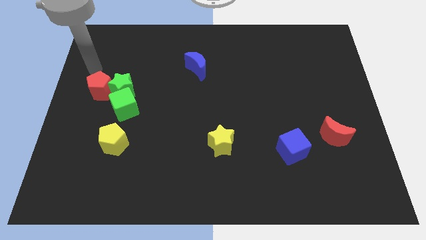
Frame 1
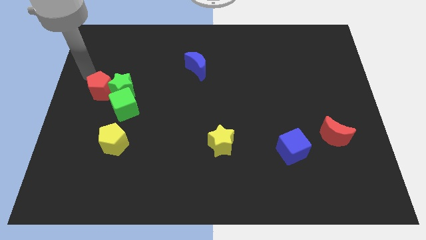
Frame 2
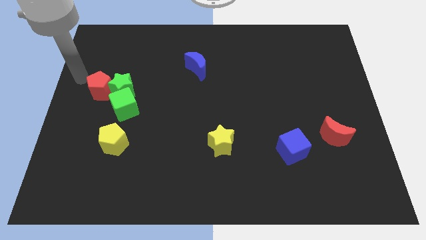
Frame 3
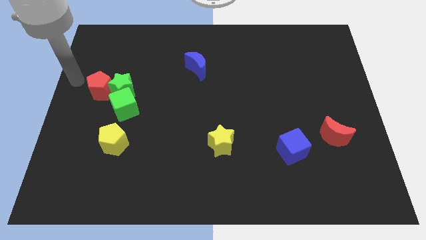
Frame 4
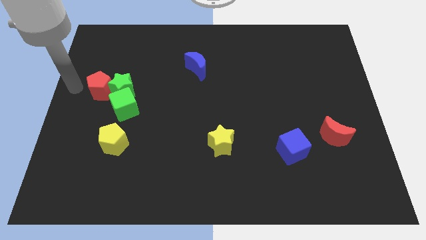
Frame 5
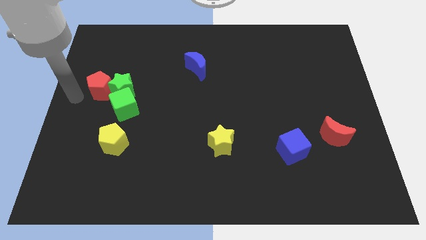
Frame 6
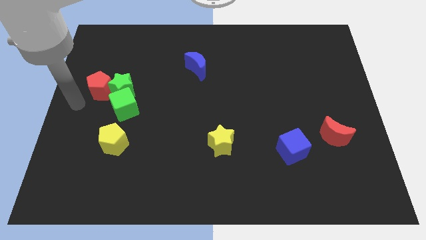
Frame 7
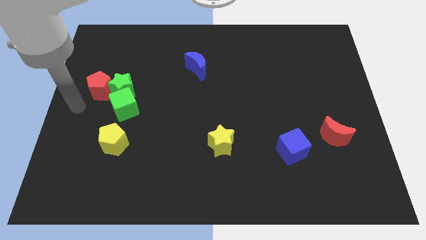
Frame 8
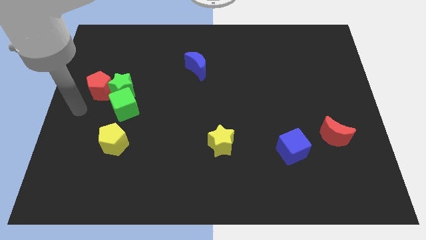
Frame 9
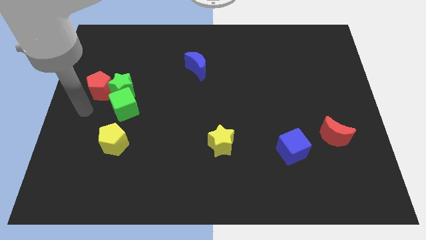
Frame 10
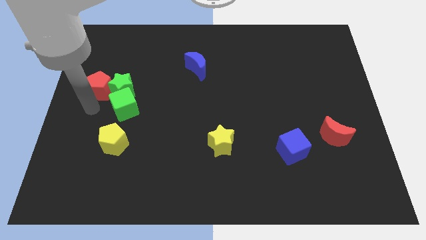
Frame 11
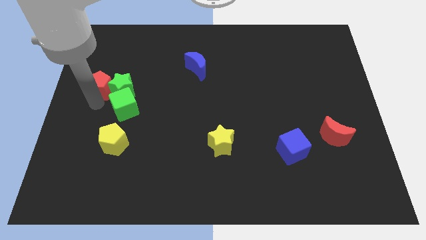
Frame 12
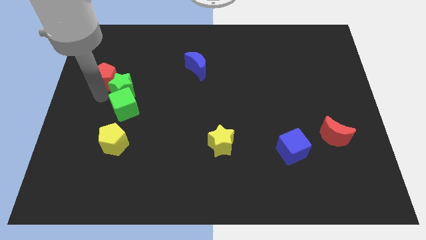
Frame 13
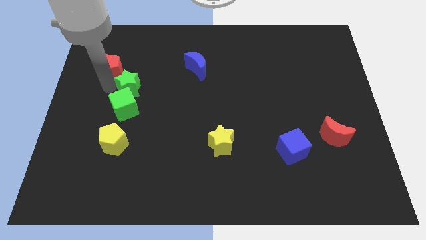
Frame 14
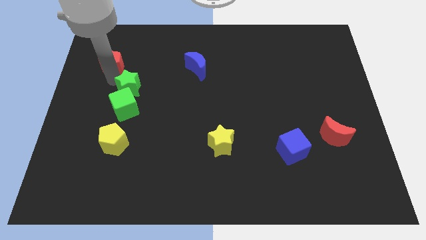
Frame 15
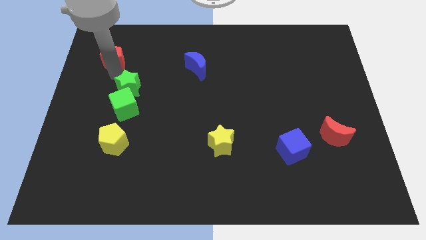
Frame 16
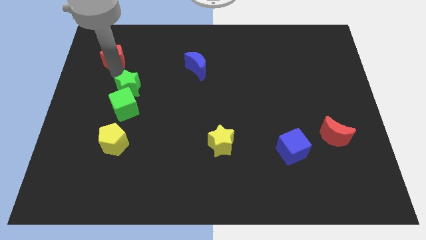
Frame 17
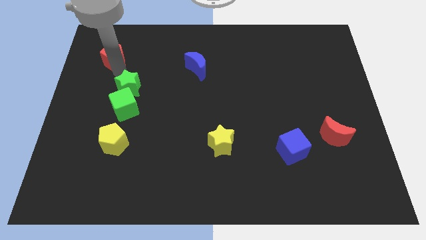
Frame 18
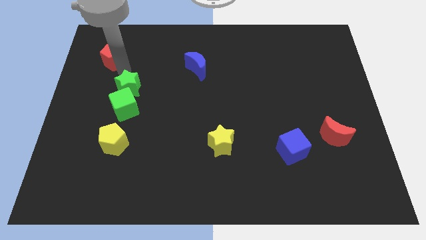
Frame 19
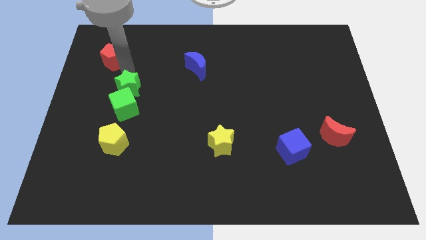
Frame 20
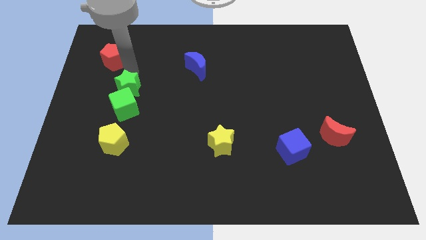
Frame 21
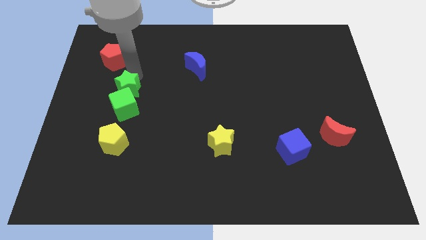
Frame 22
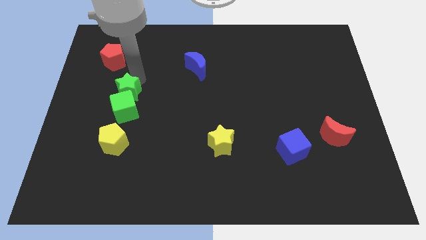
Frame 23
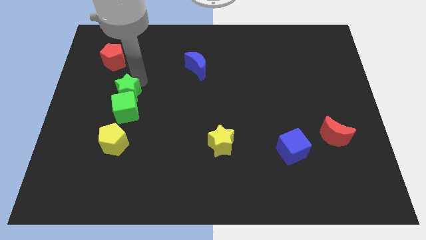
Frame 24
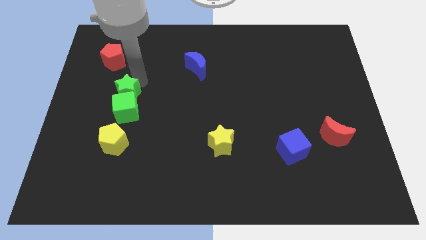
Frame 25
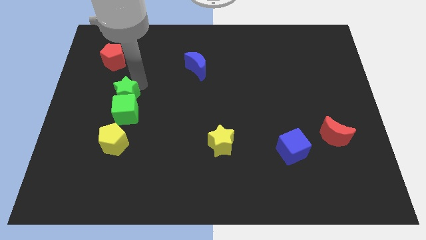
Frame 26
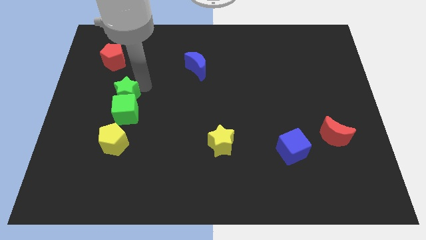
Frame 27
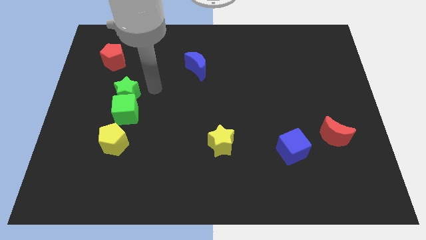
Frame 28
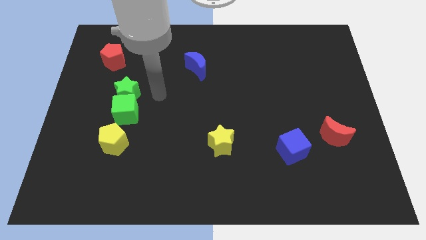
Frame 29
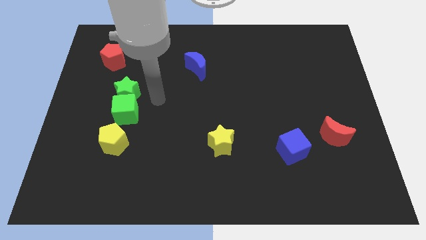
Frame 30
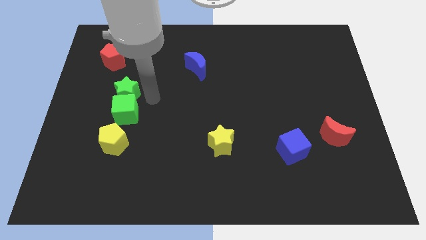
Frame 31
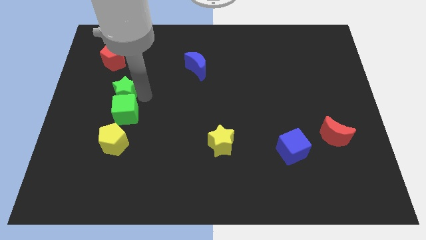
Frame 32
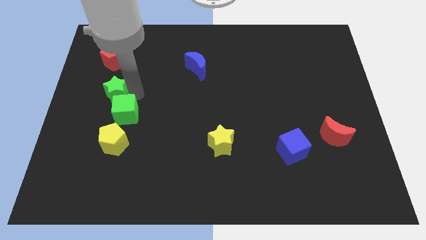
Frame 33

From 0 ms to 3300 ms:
separate red pentagon from green blocks

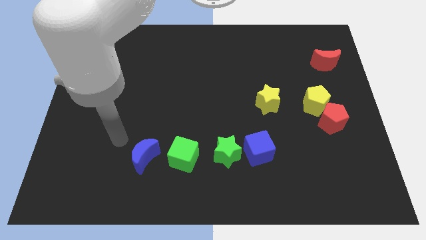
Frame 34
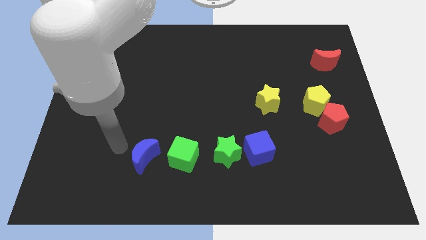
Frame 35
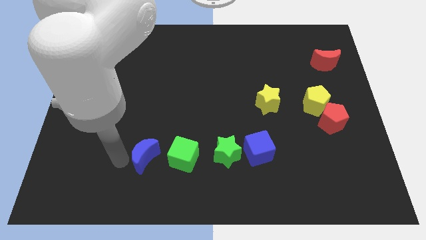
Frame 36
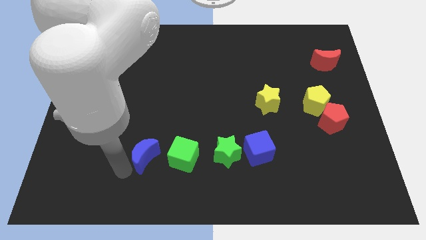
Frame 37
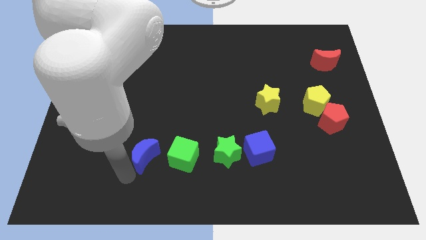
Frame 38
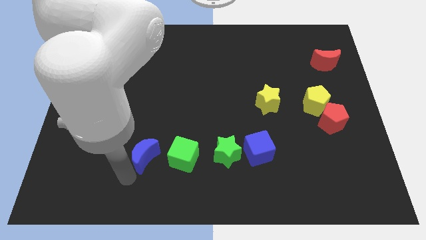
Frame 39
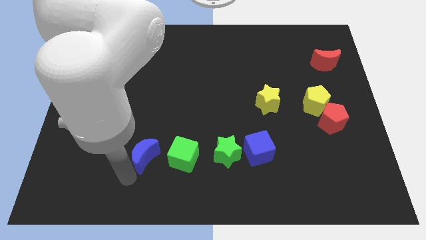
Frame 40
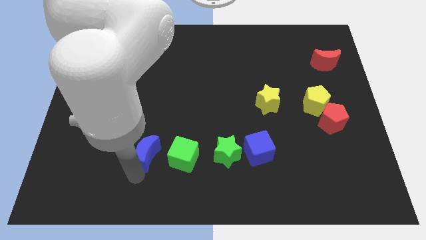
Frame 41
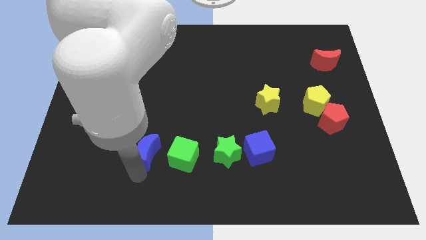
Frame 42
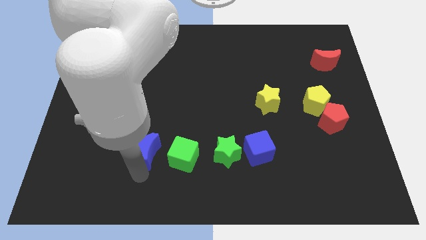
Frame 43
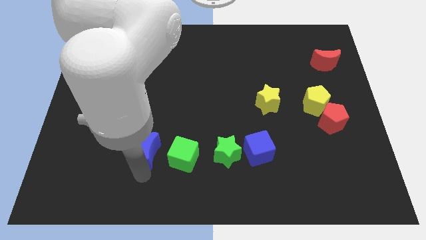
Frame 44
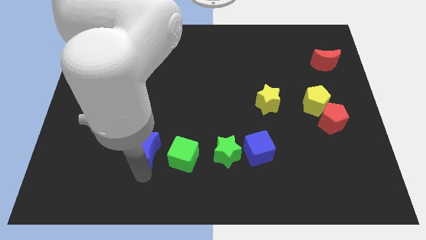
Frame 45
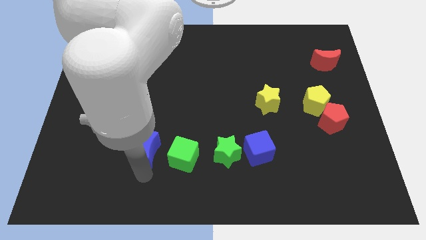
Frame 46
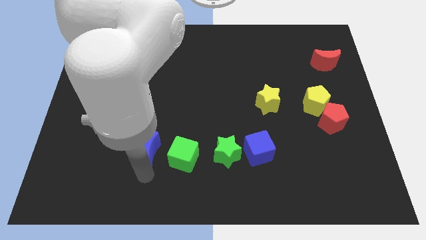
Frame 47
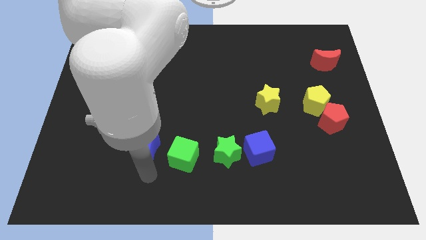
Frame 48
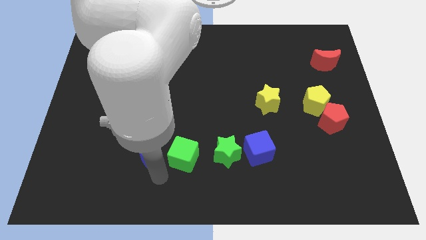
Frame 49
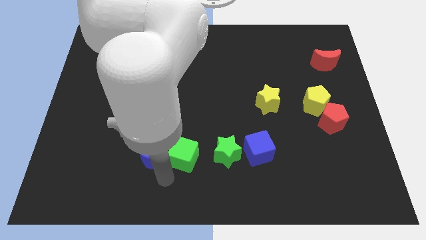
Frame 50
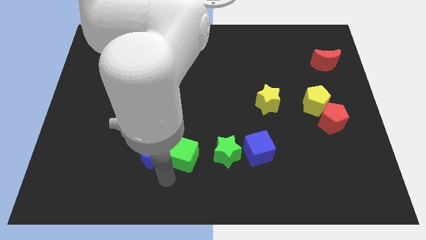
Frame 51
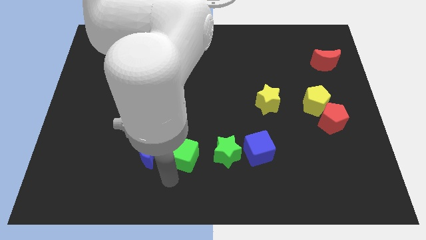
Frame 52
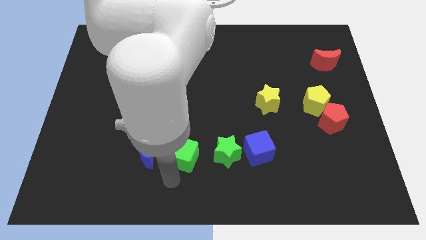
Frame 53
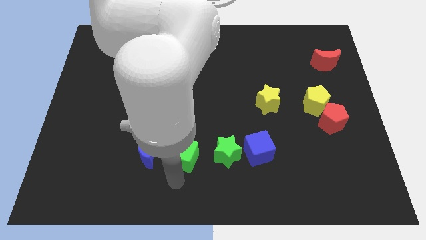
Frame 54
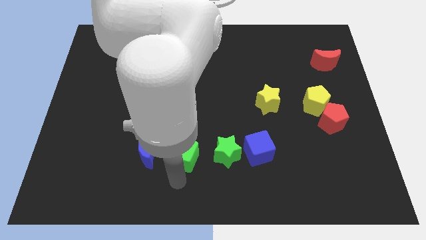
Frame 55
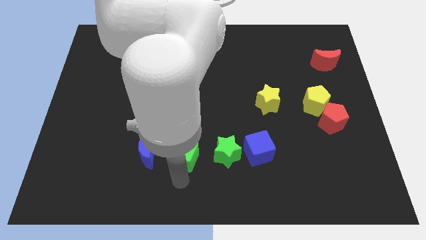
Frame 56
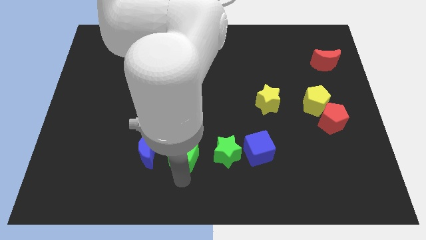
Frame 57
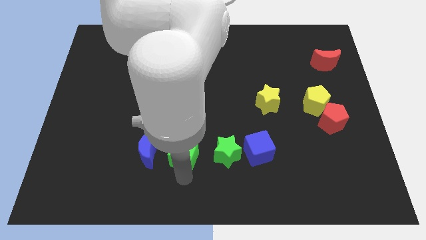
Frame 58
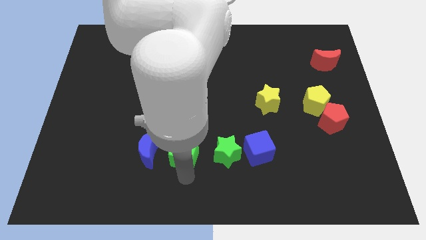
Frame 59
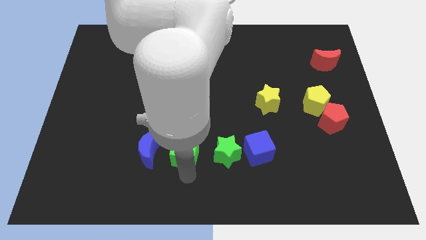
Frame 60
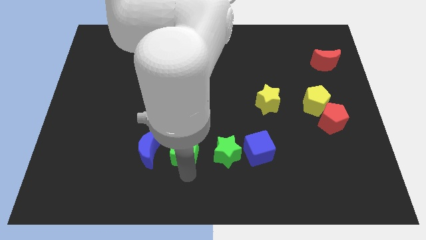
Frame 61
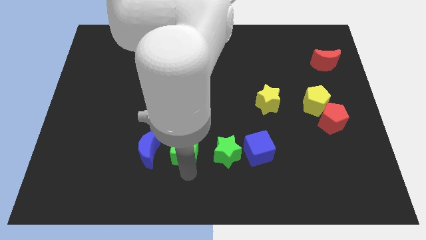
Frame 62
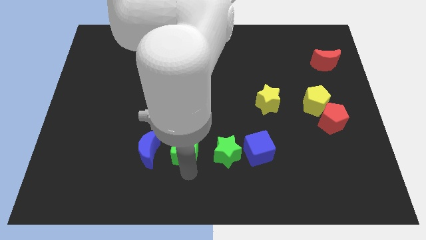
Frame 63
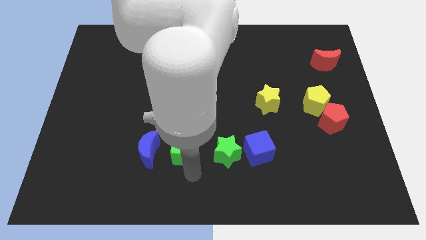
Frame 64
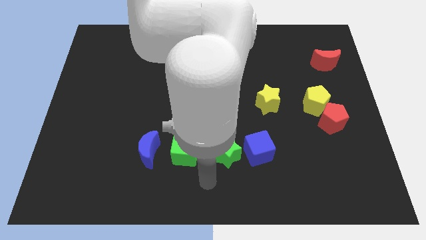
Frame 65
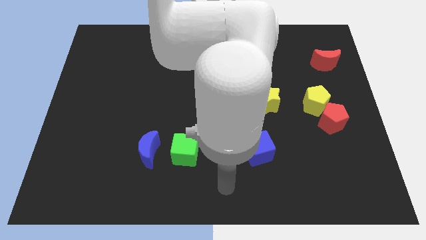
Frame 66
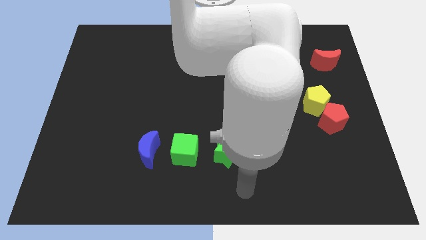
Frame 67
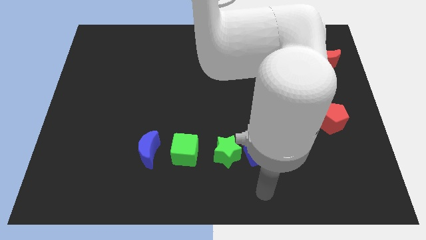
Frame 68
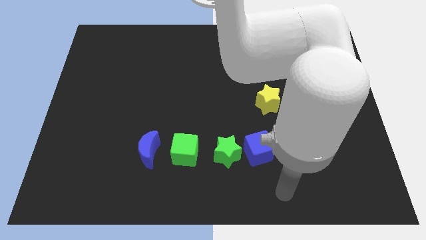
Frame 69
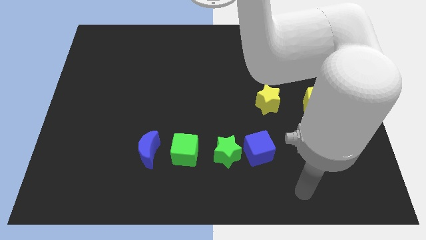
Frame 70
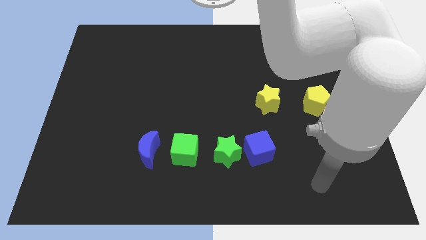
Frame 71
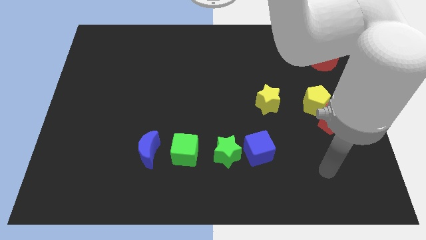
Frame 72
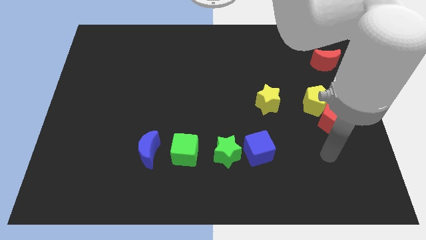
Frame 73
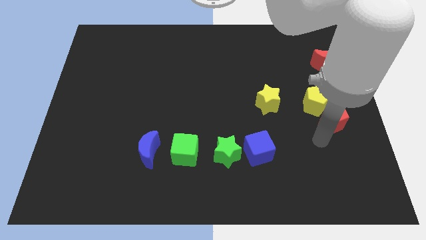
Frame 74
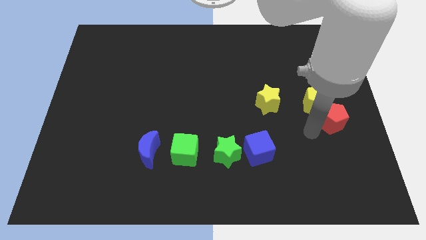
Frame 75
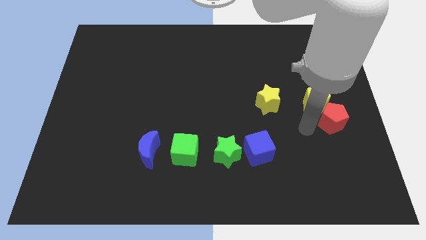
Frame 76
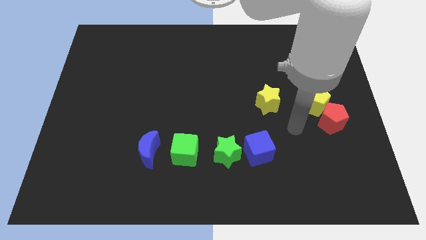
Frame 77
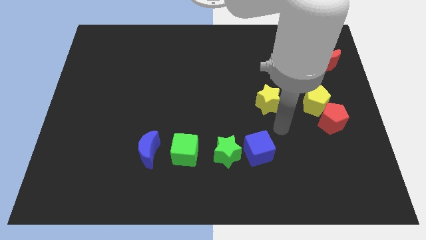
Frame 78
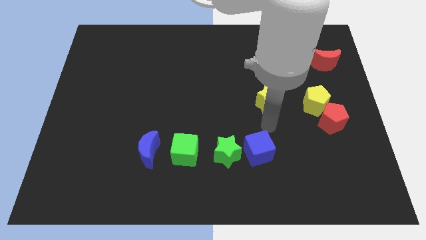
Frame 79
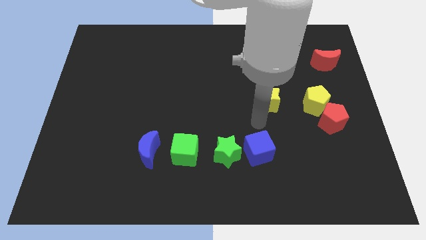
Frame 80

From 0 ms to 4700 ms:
move the arm towards the yellow star

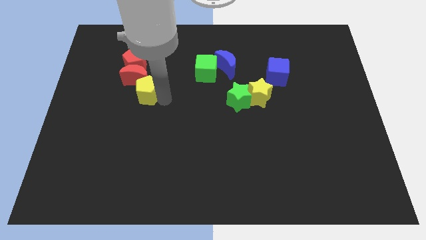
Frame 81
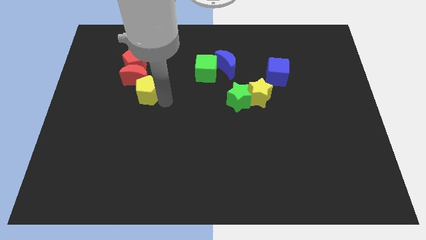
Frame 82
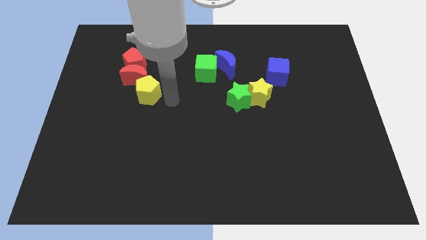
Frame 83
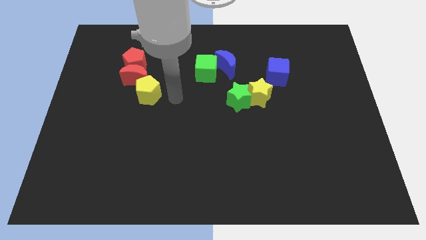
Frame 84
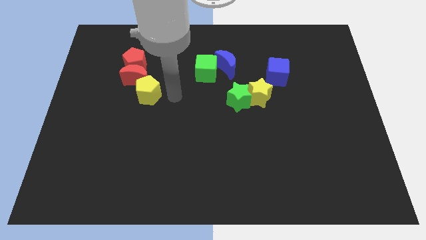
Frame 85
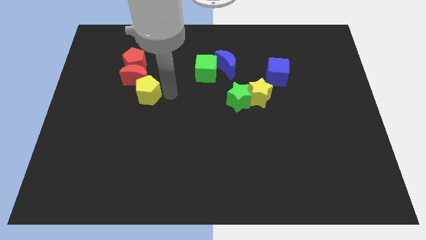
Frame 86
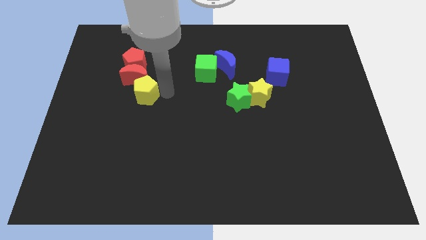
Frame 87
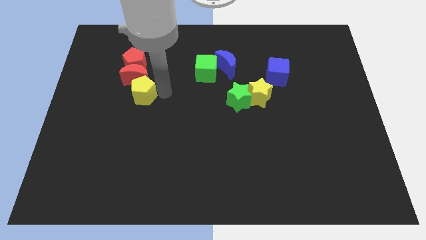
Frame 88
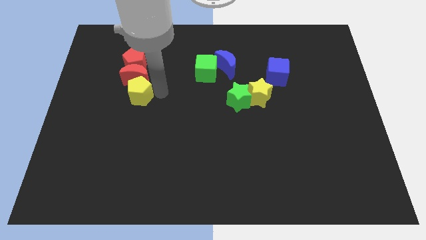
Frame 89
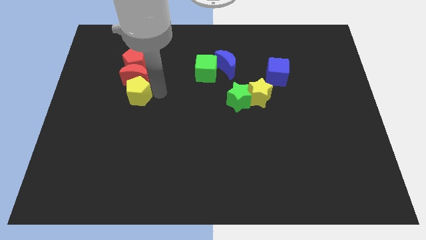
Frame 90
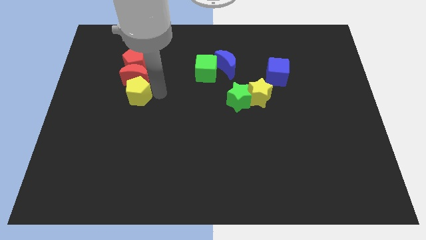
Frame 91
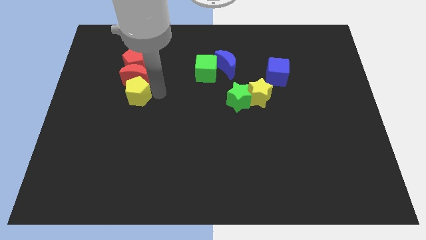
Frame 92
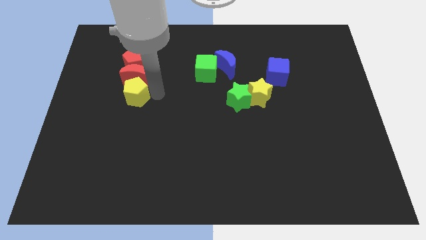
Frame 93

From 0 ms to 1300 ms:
push the yellow pentagon below the red moon
